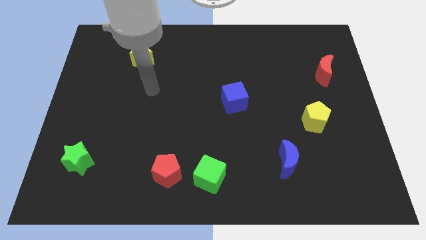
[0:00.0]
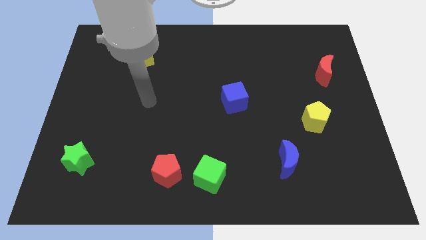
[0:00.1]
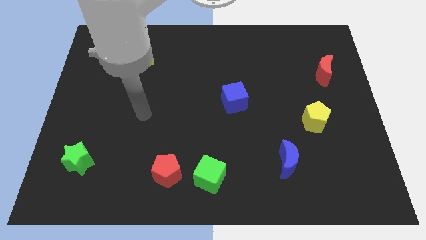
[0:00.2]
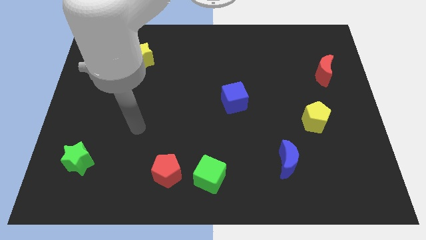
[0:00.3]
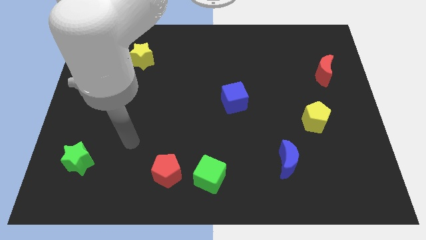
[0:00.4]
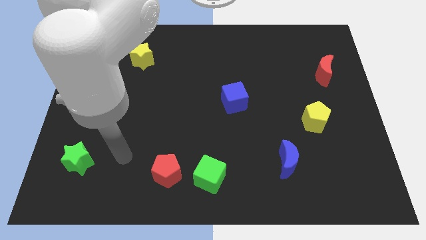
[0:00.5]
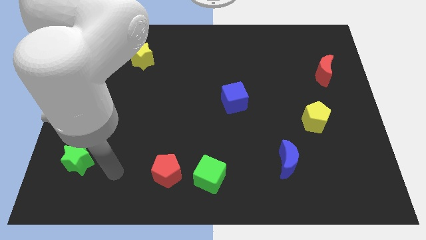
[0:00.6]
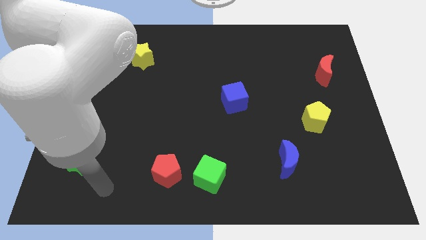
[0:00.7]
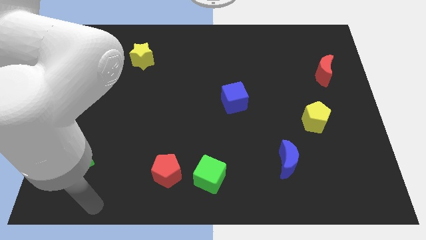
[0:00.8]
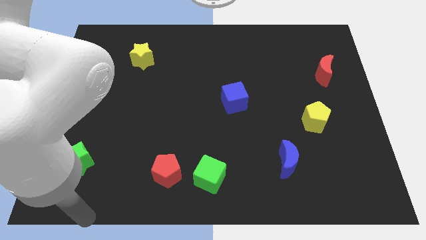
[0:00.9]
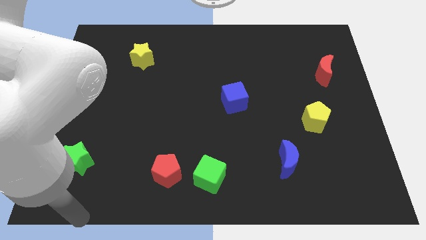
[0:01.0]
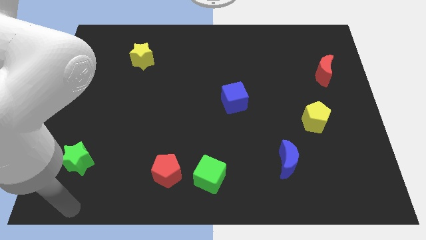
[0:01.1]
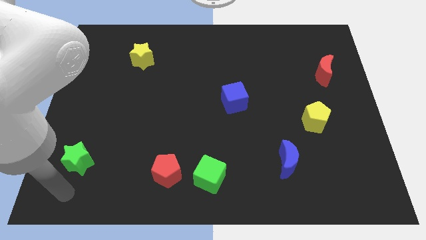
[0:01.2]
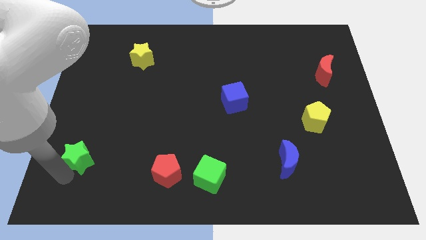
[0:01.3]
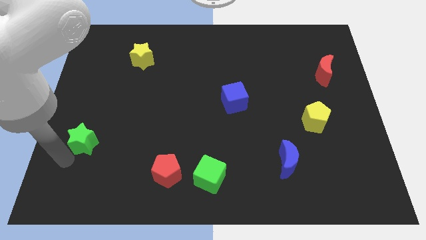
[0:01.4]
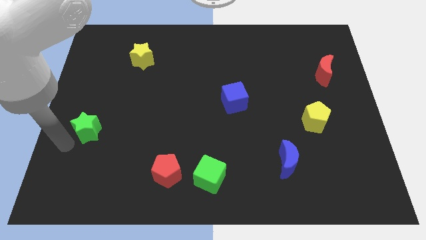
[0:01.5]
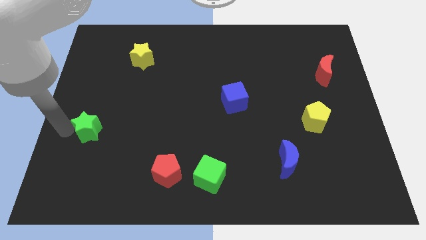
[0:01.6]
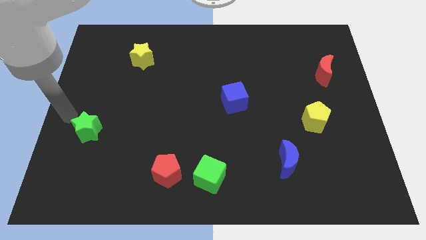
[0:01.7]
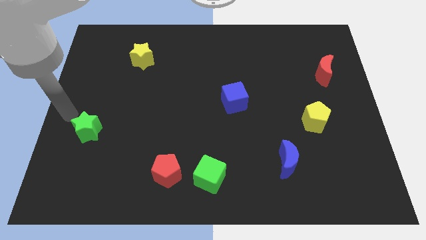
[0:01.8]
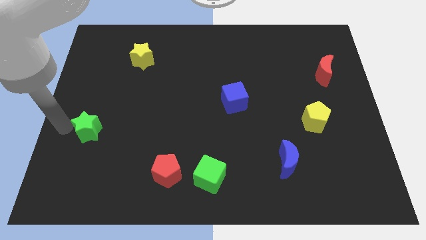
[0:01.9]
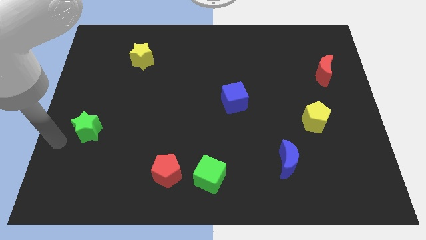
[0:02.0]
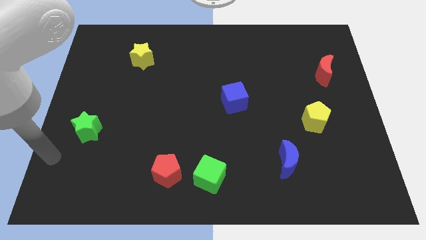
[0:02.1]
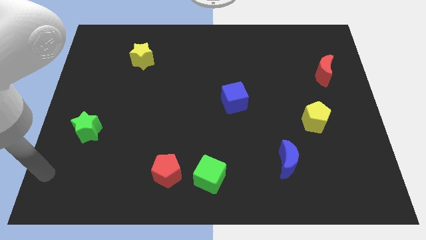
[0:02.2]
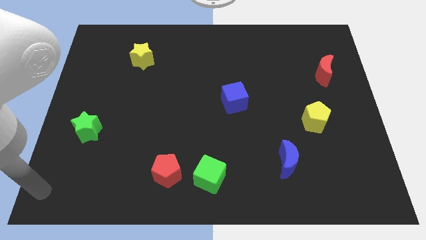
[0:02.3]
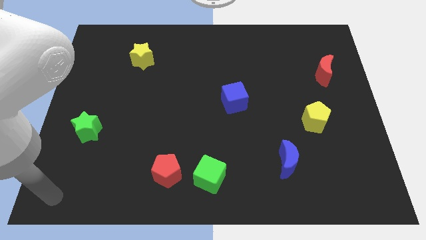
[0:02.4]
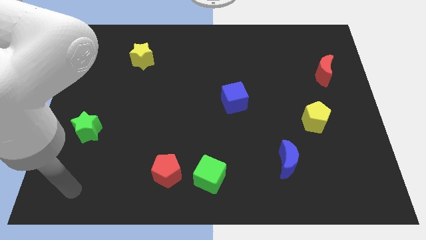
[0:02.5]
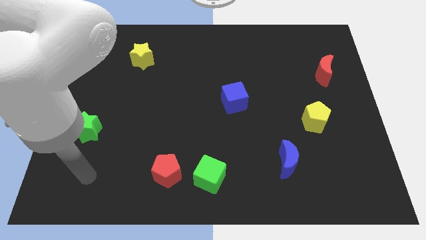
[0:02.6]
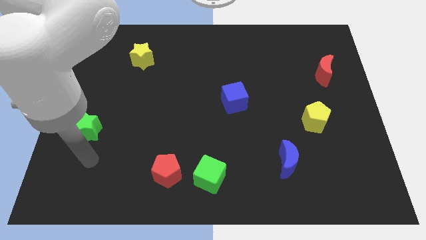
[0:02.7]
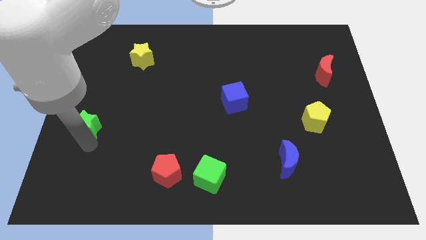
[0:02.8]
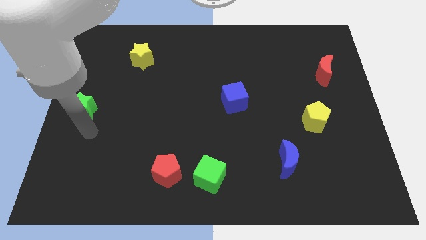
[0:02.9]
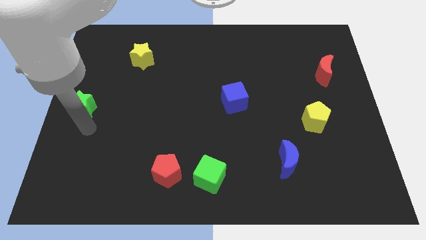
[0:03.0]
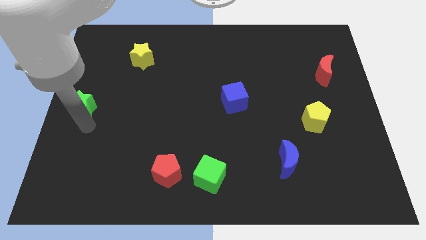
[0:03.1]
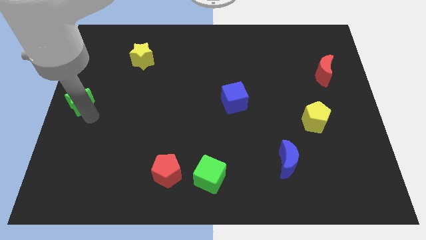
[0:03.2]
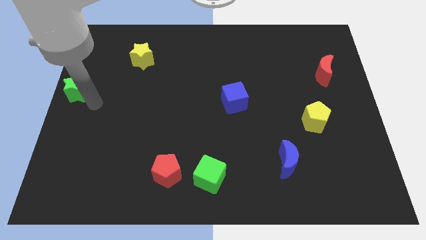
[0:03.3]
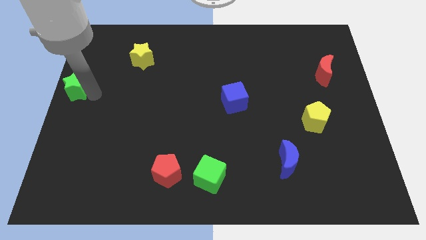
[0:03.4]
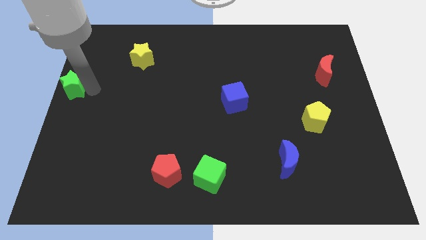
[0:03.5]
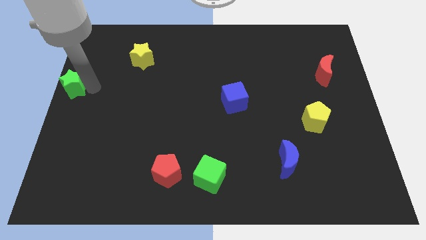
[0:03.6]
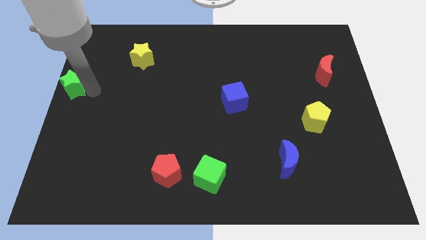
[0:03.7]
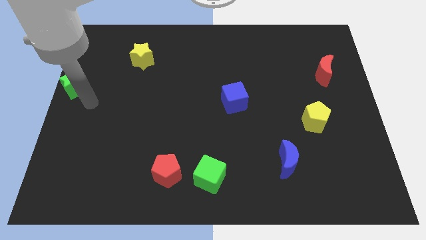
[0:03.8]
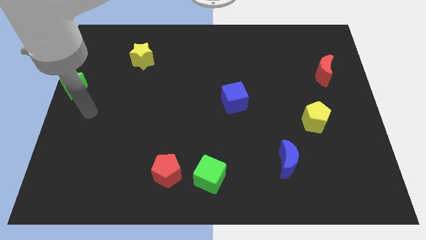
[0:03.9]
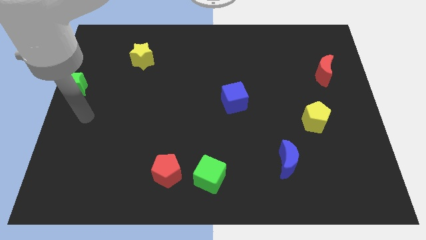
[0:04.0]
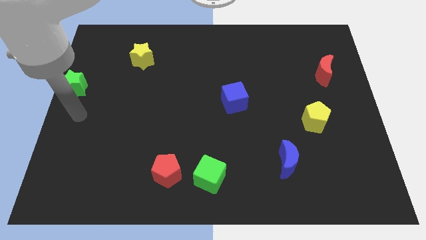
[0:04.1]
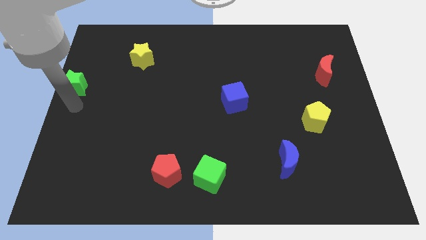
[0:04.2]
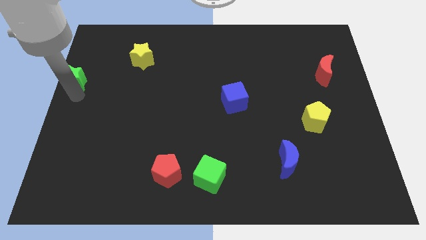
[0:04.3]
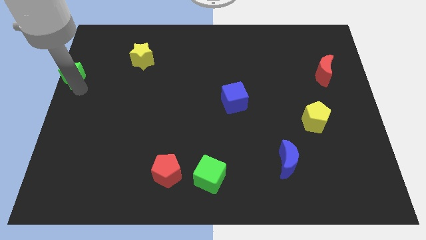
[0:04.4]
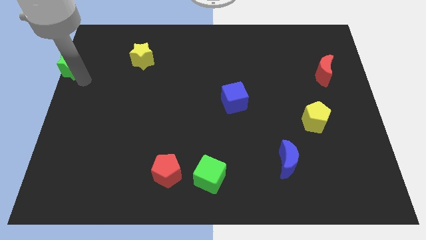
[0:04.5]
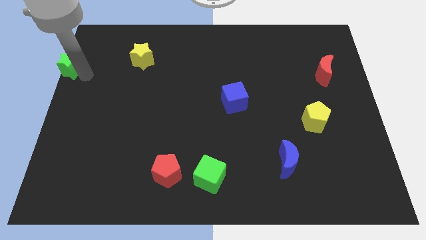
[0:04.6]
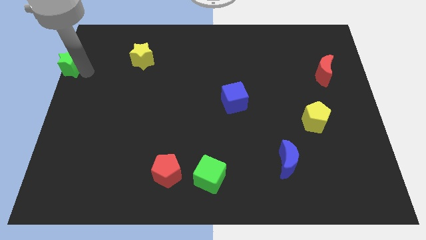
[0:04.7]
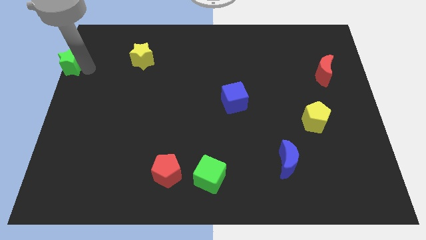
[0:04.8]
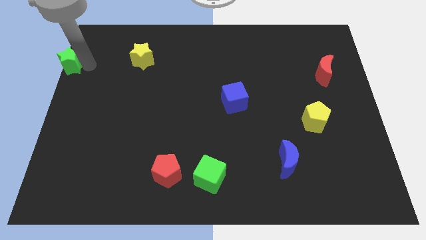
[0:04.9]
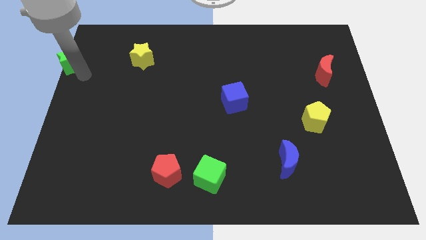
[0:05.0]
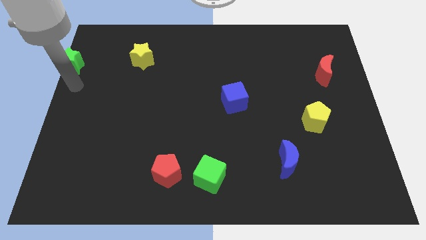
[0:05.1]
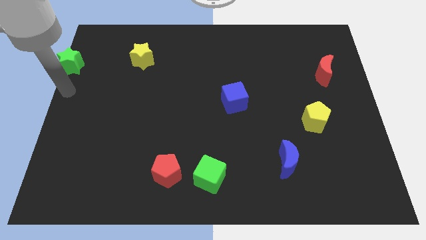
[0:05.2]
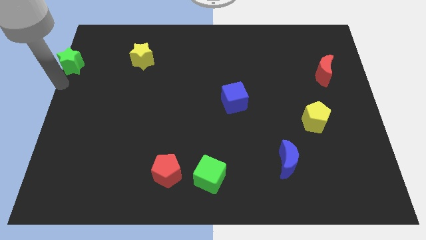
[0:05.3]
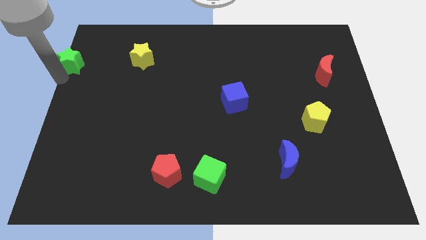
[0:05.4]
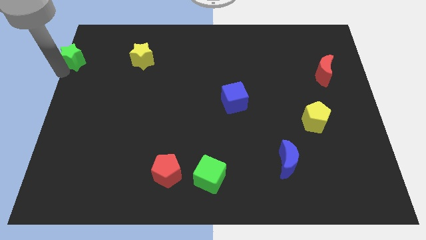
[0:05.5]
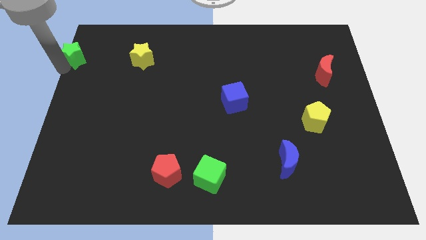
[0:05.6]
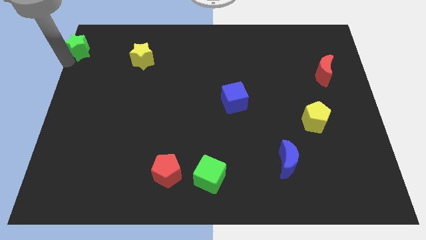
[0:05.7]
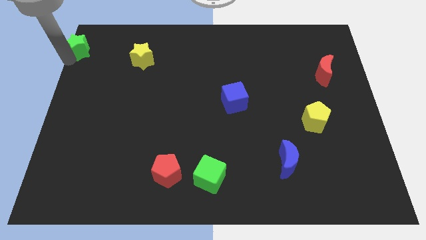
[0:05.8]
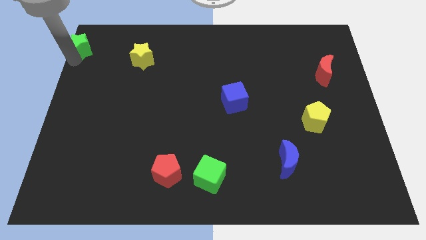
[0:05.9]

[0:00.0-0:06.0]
move the green star to the left top of the board

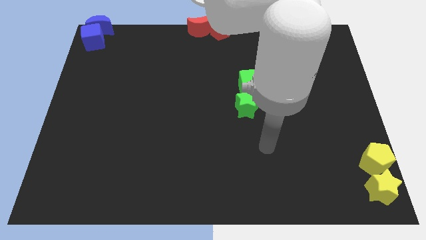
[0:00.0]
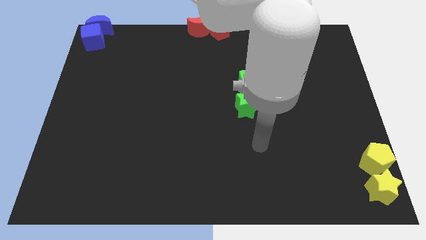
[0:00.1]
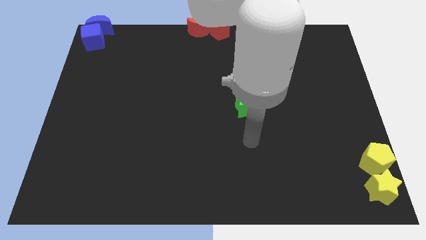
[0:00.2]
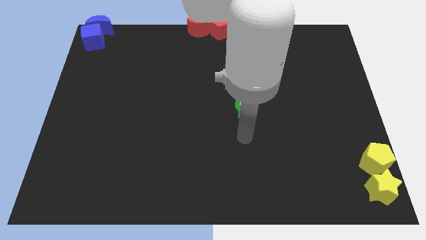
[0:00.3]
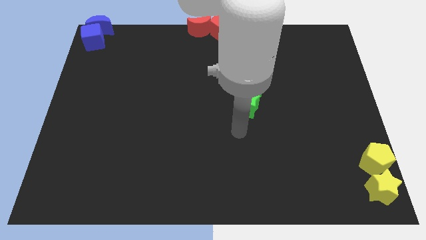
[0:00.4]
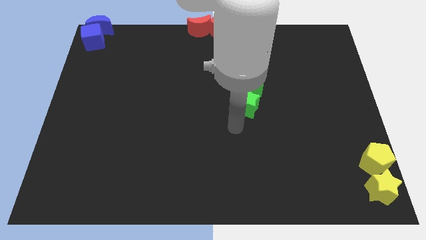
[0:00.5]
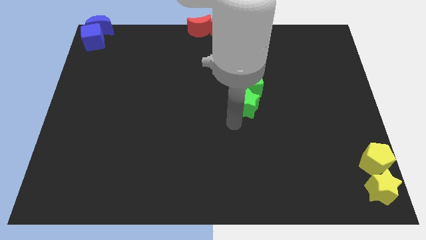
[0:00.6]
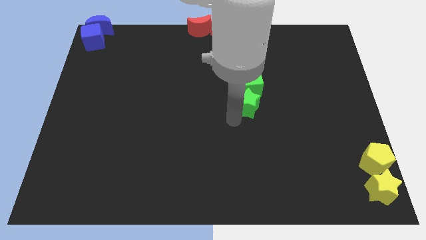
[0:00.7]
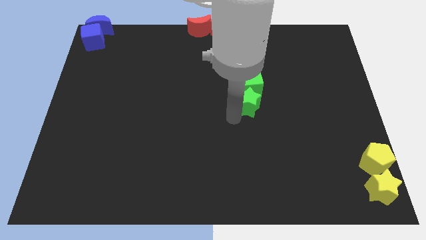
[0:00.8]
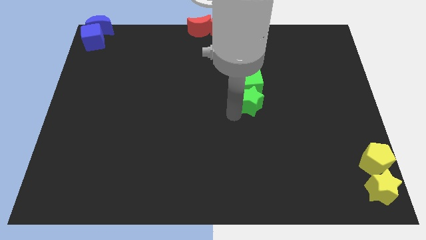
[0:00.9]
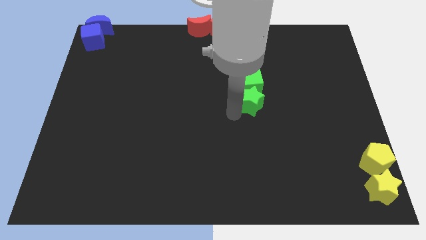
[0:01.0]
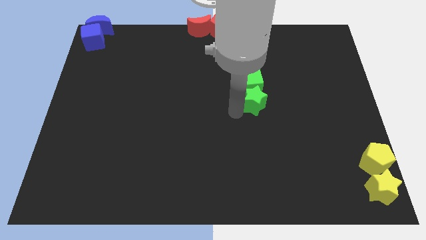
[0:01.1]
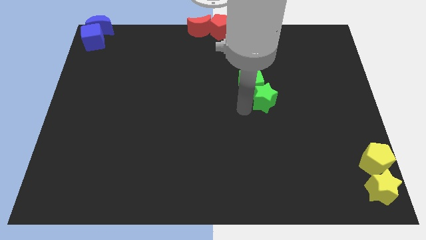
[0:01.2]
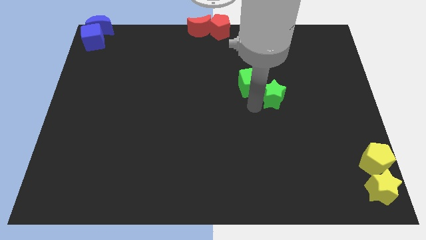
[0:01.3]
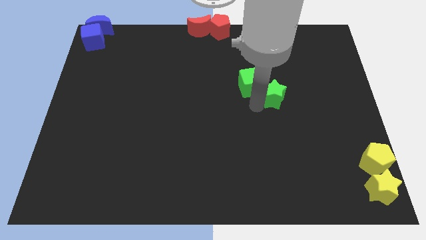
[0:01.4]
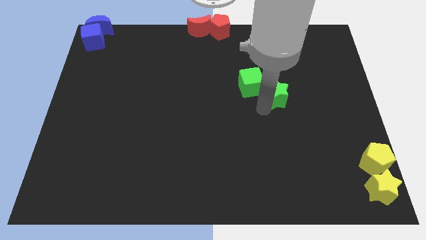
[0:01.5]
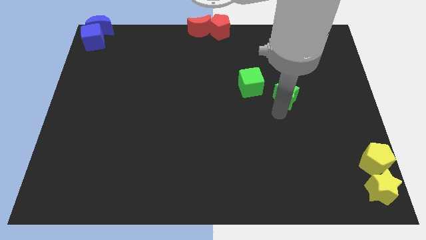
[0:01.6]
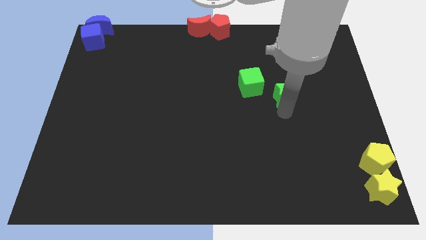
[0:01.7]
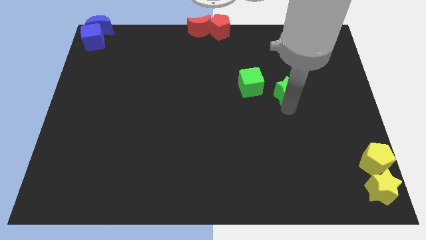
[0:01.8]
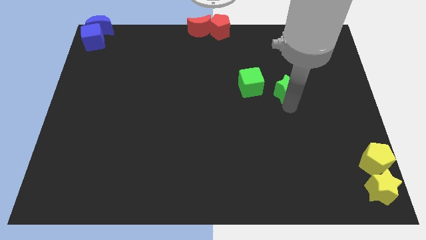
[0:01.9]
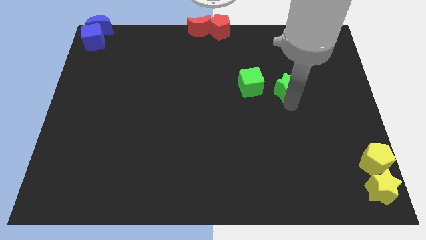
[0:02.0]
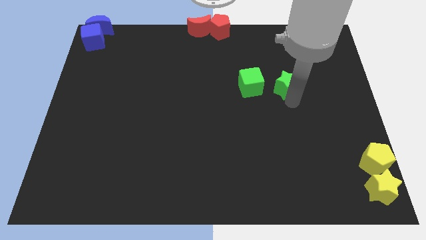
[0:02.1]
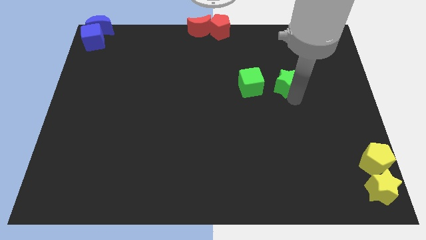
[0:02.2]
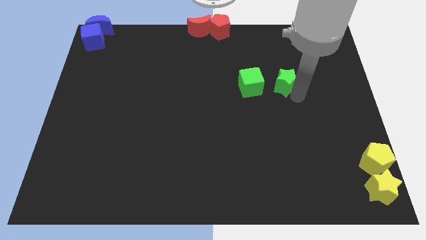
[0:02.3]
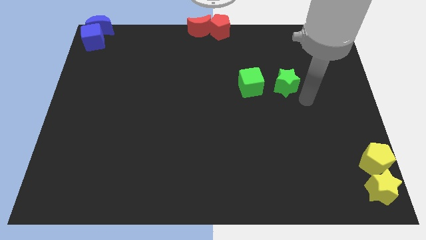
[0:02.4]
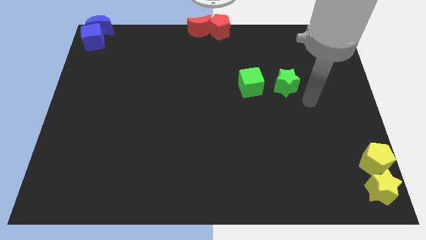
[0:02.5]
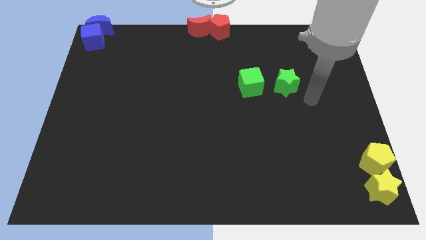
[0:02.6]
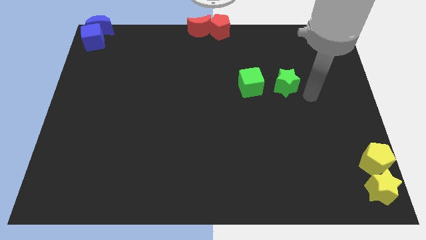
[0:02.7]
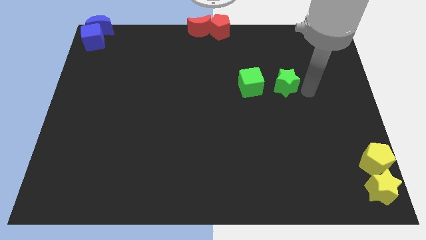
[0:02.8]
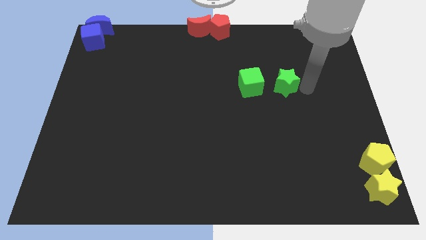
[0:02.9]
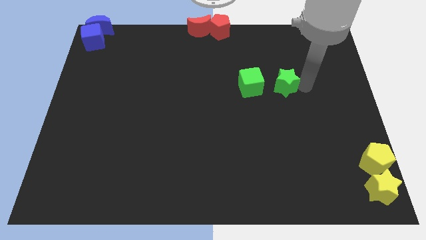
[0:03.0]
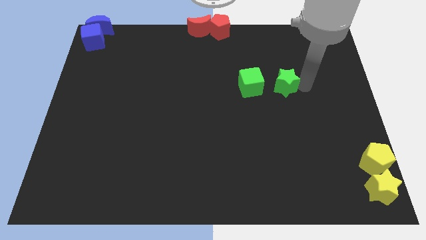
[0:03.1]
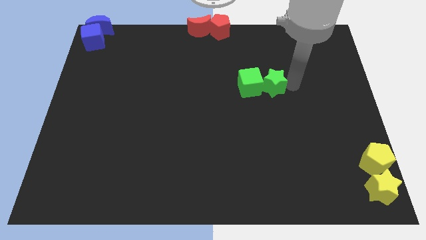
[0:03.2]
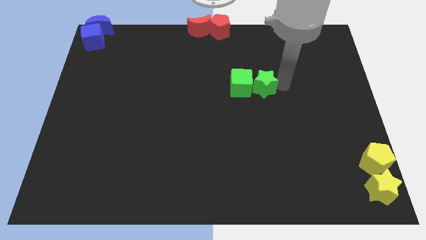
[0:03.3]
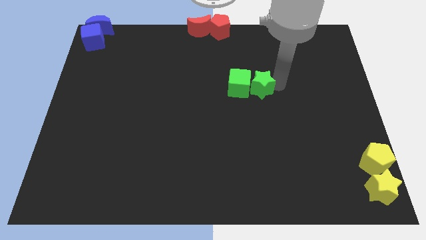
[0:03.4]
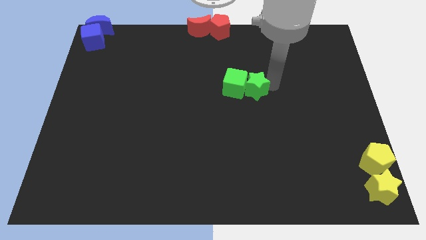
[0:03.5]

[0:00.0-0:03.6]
push the green star towards the green cube
